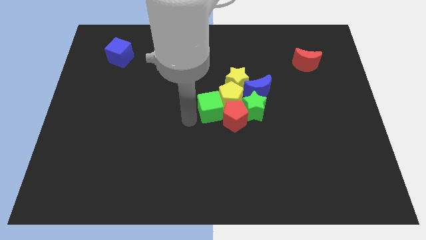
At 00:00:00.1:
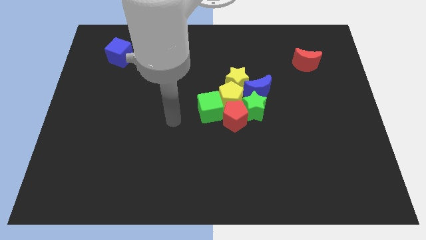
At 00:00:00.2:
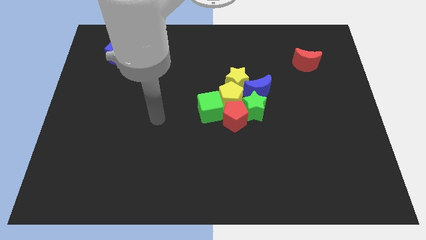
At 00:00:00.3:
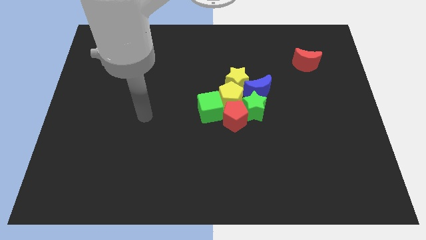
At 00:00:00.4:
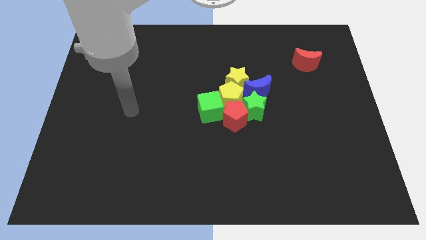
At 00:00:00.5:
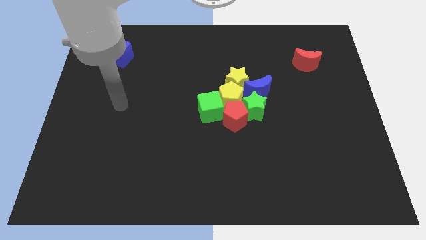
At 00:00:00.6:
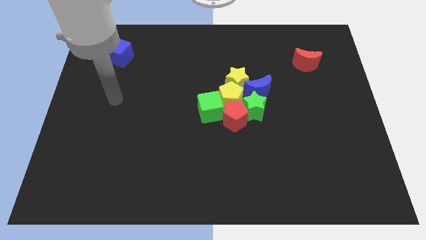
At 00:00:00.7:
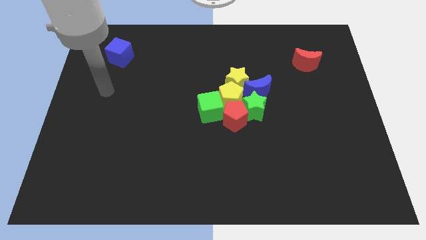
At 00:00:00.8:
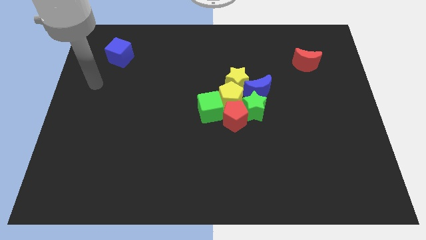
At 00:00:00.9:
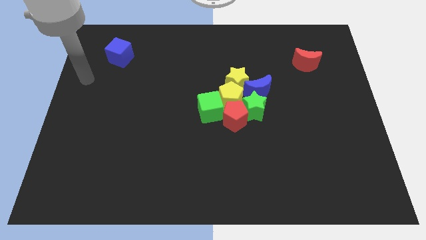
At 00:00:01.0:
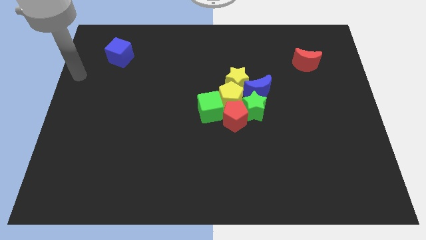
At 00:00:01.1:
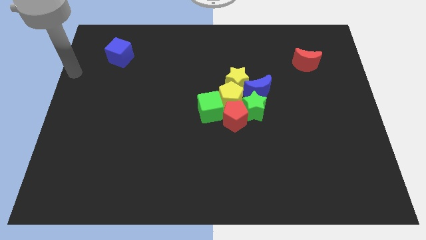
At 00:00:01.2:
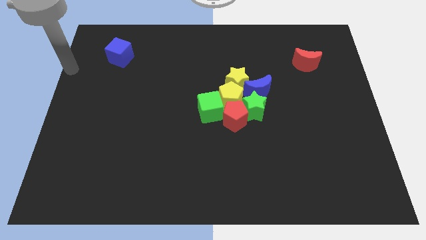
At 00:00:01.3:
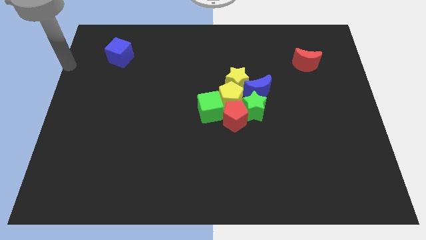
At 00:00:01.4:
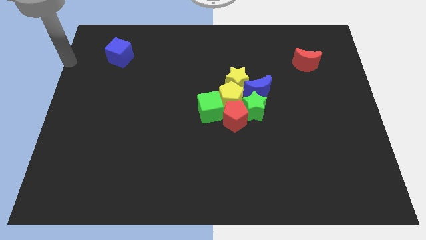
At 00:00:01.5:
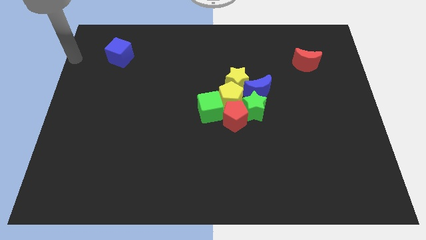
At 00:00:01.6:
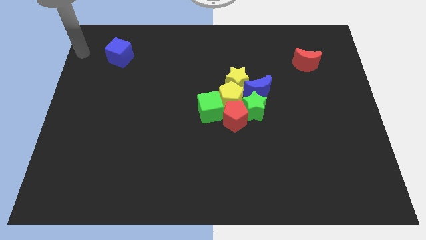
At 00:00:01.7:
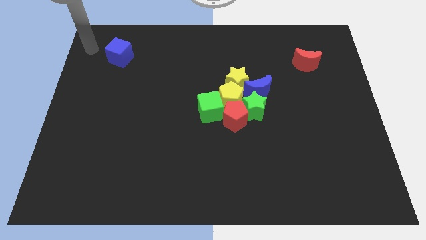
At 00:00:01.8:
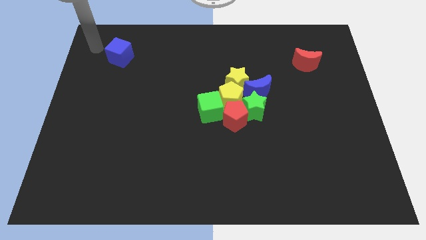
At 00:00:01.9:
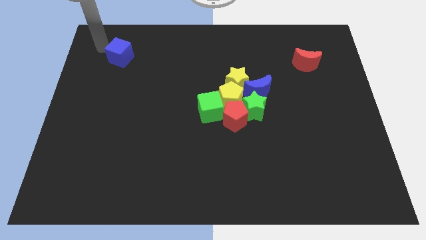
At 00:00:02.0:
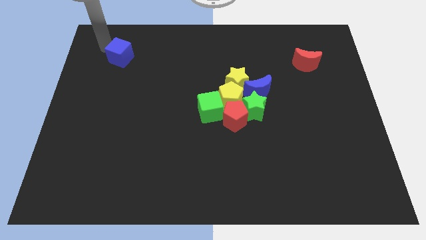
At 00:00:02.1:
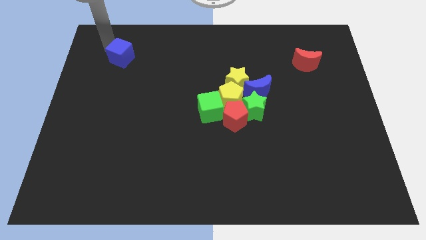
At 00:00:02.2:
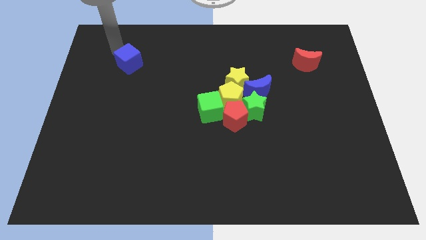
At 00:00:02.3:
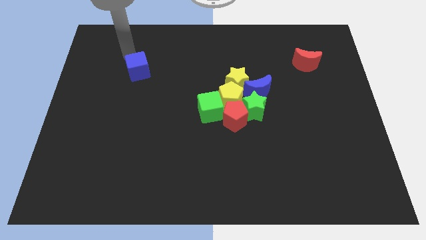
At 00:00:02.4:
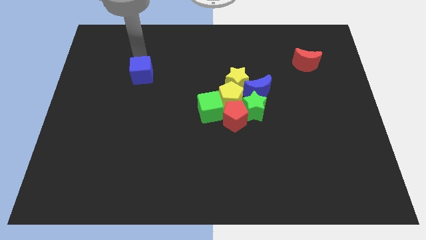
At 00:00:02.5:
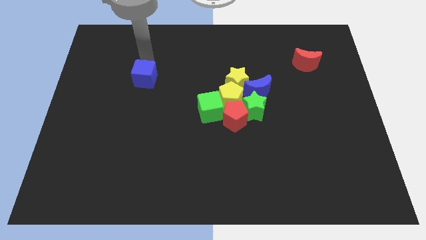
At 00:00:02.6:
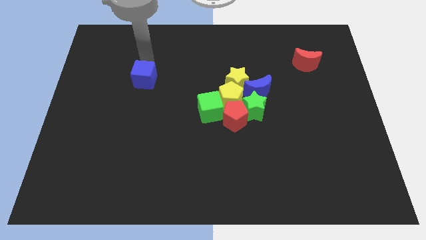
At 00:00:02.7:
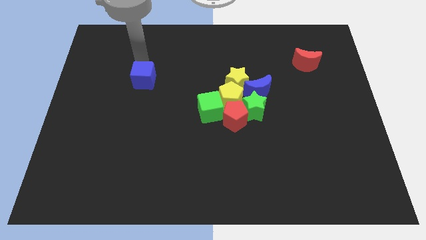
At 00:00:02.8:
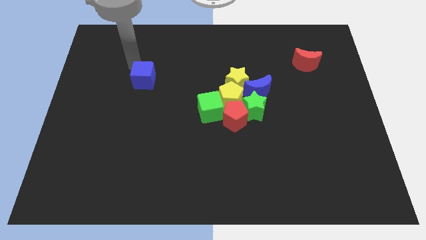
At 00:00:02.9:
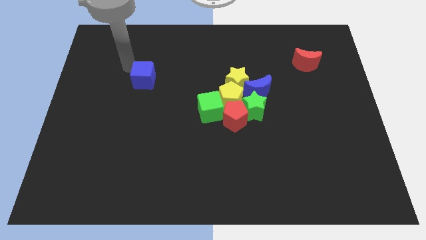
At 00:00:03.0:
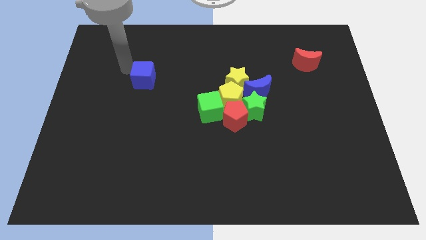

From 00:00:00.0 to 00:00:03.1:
push the blue cube towards group of blocks

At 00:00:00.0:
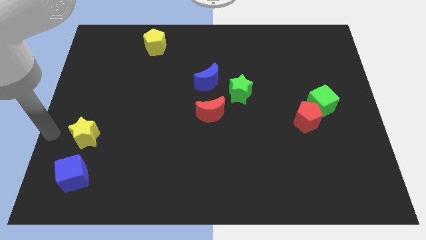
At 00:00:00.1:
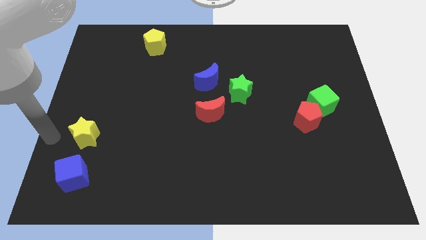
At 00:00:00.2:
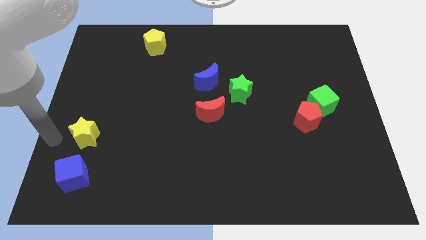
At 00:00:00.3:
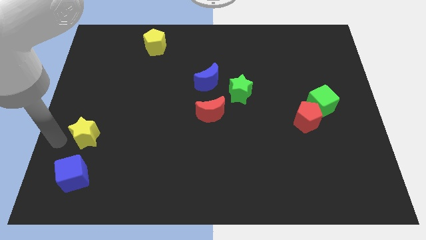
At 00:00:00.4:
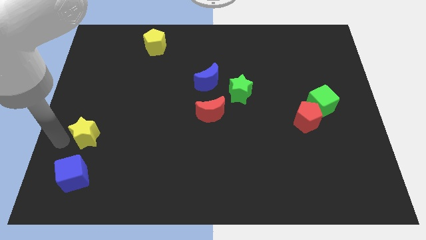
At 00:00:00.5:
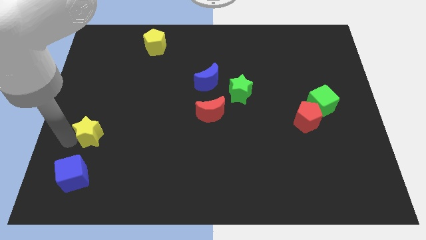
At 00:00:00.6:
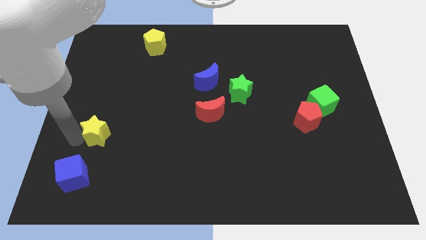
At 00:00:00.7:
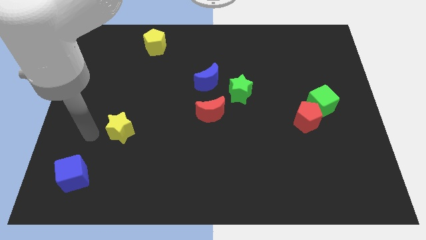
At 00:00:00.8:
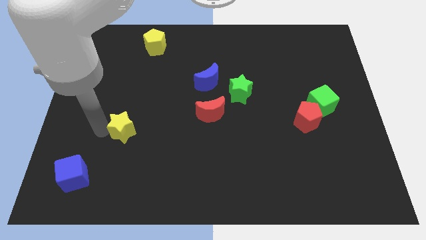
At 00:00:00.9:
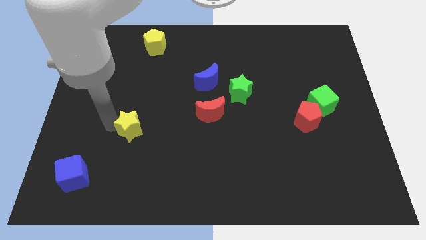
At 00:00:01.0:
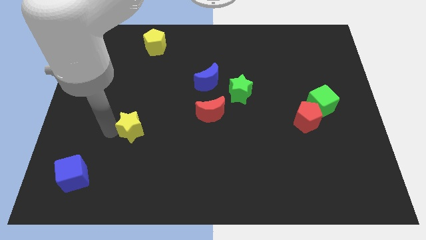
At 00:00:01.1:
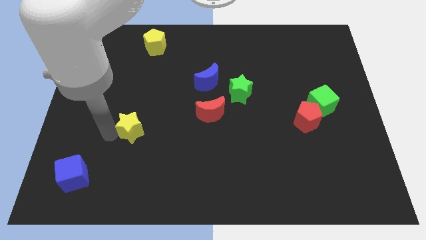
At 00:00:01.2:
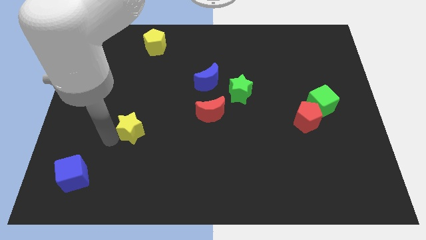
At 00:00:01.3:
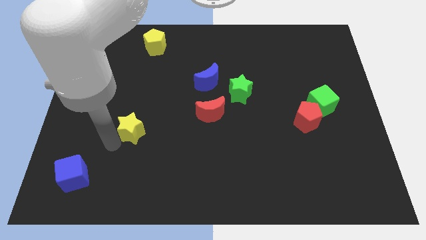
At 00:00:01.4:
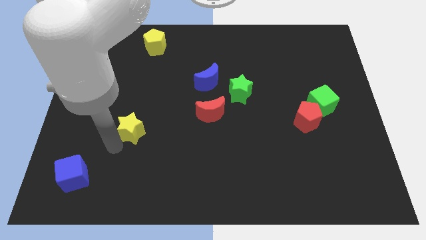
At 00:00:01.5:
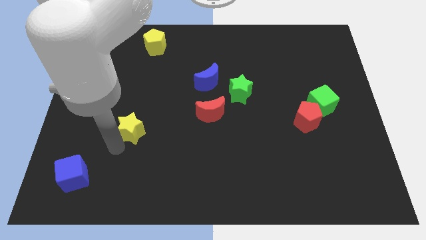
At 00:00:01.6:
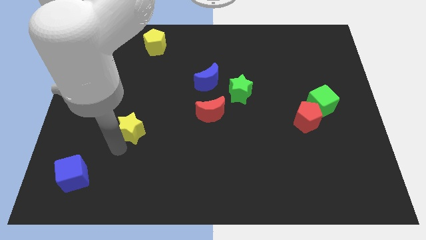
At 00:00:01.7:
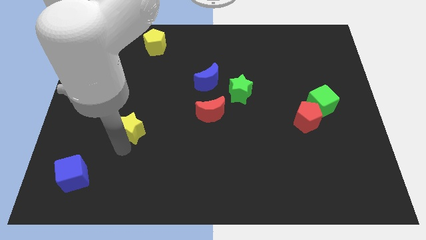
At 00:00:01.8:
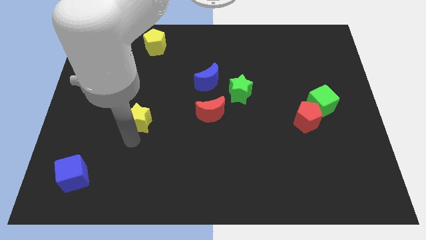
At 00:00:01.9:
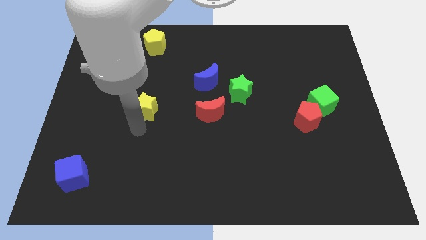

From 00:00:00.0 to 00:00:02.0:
place the yellow star left to the red moon

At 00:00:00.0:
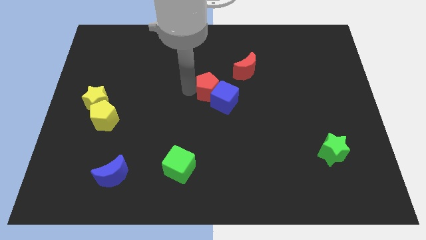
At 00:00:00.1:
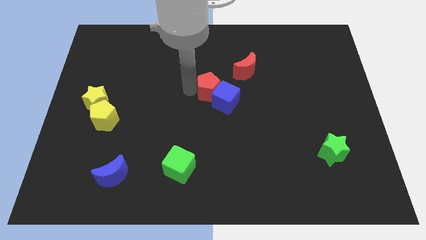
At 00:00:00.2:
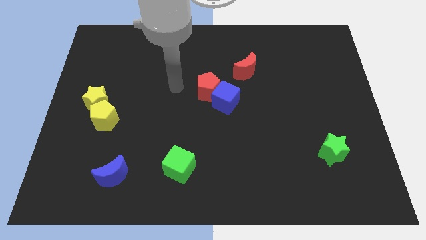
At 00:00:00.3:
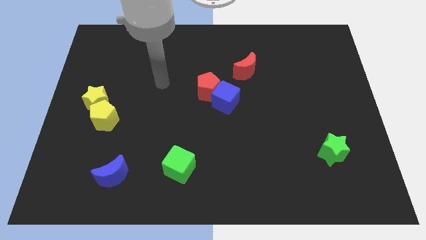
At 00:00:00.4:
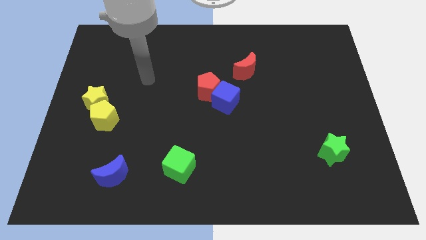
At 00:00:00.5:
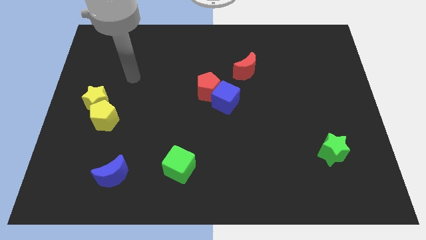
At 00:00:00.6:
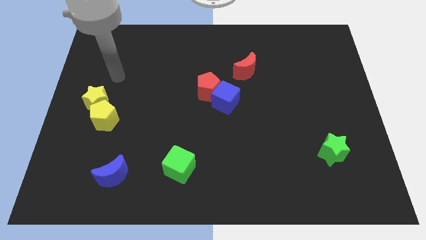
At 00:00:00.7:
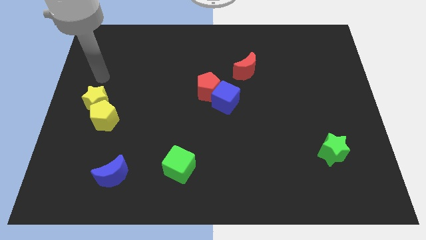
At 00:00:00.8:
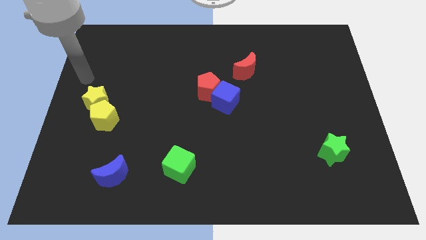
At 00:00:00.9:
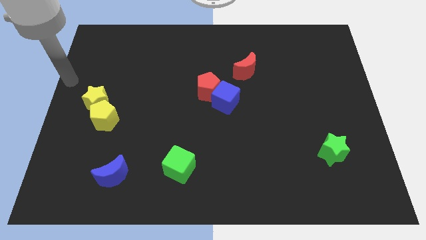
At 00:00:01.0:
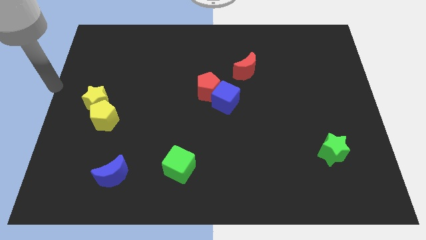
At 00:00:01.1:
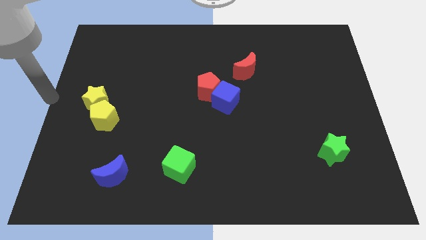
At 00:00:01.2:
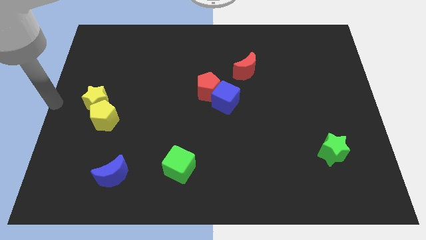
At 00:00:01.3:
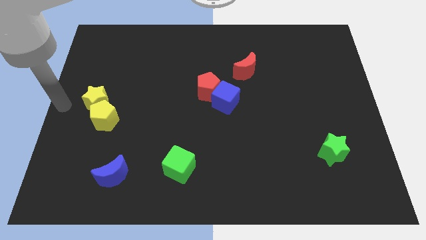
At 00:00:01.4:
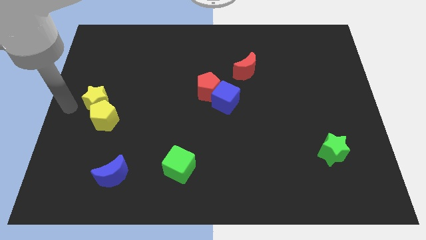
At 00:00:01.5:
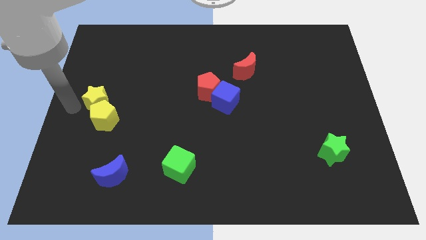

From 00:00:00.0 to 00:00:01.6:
move your arm to the left of the yellow star

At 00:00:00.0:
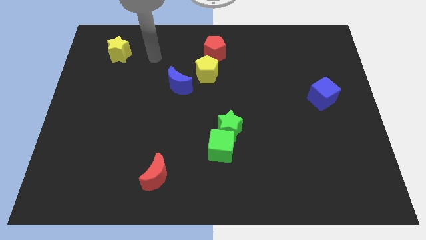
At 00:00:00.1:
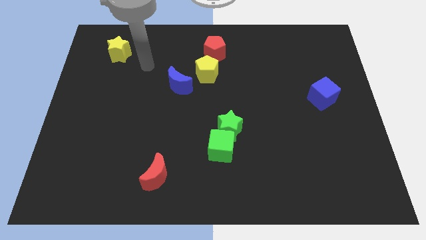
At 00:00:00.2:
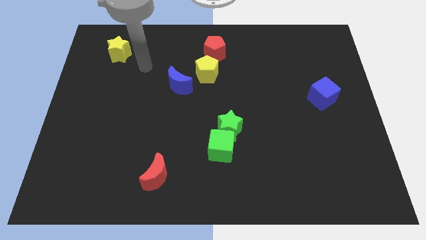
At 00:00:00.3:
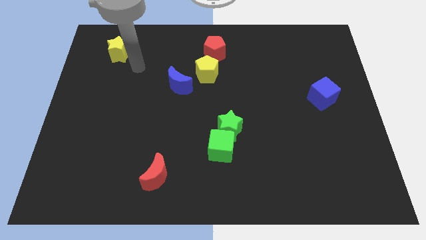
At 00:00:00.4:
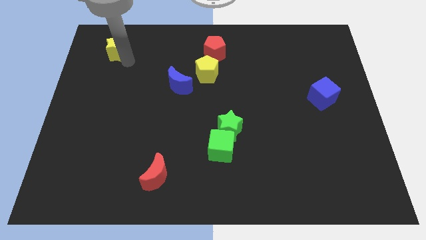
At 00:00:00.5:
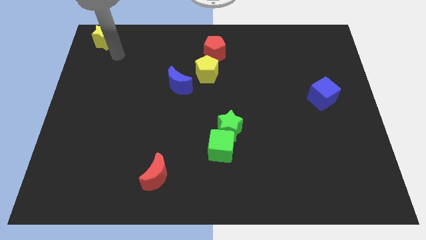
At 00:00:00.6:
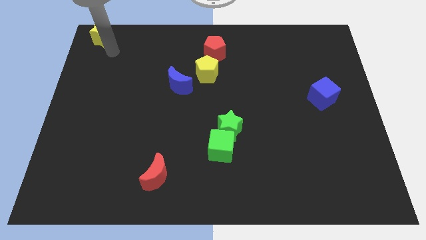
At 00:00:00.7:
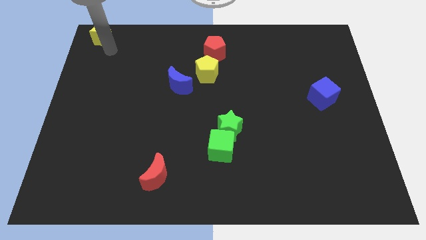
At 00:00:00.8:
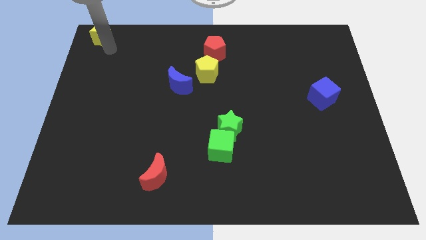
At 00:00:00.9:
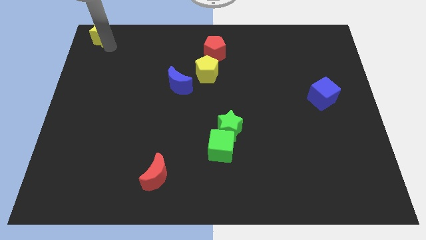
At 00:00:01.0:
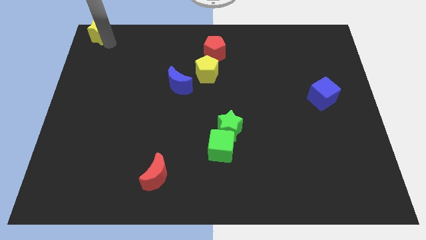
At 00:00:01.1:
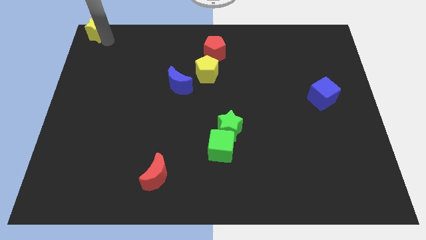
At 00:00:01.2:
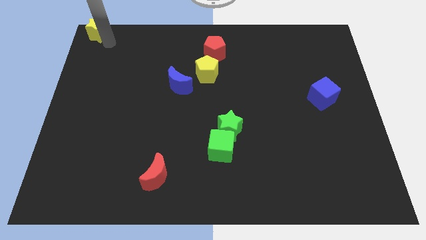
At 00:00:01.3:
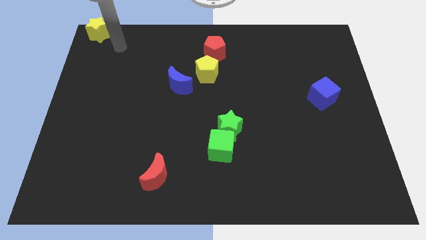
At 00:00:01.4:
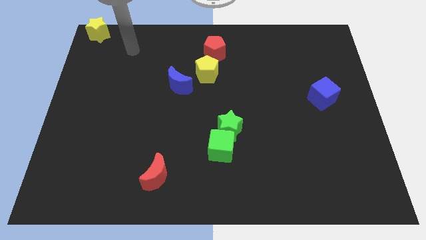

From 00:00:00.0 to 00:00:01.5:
push the yellow star at the top left corner of the board

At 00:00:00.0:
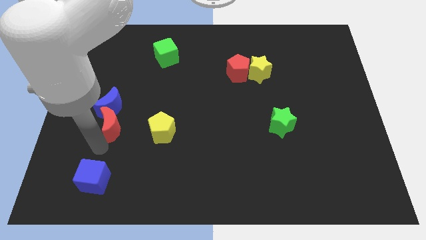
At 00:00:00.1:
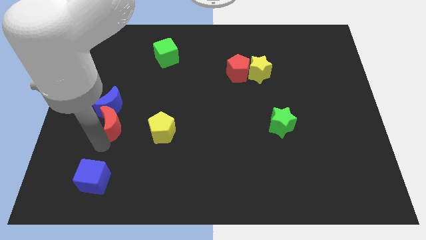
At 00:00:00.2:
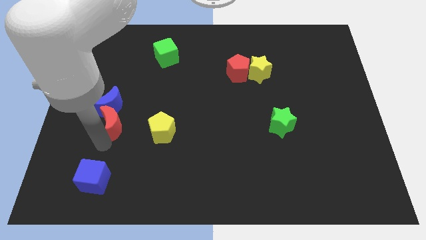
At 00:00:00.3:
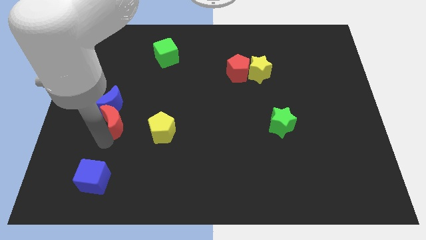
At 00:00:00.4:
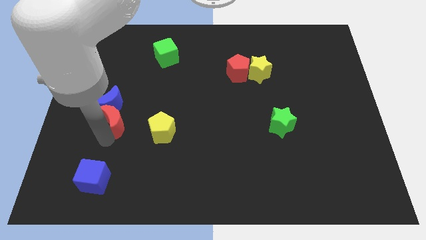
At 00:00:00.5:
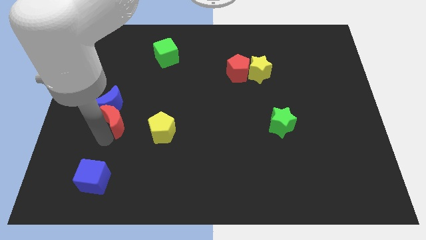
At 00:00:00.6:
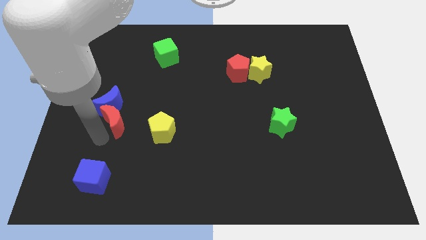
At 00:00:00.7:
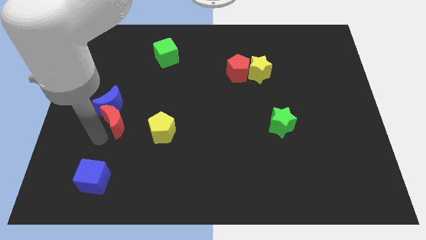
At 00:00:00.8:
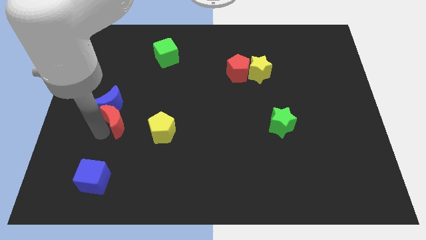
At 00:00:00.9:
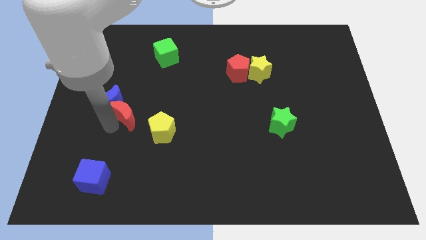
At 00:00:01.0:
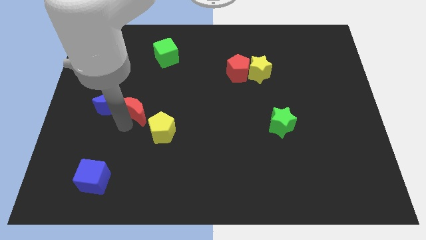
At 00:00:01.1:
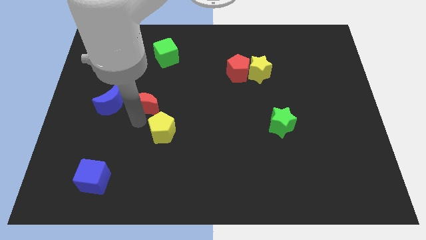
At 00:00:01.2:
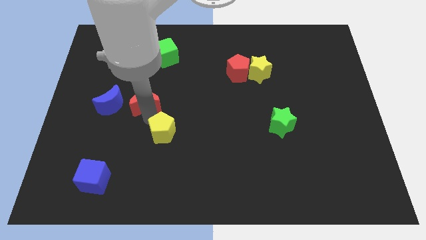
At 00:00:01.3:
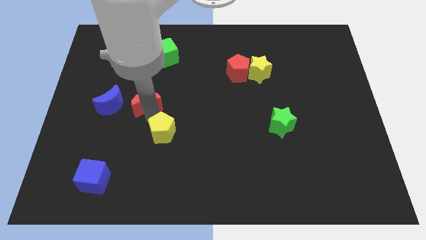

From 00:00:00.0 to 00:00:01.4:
place red crescent above yellow pentagon
